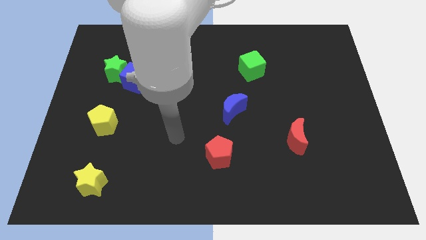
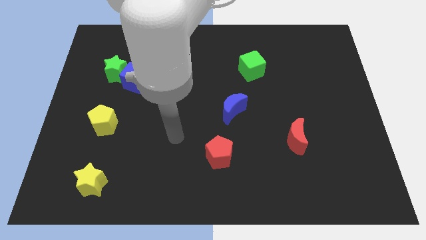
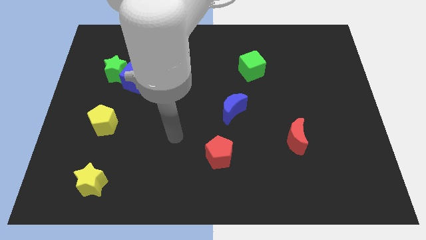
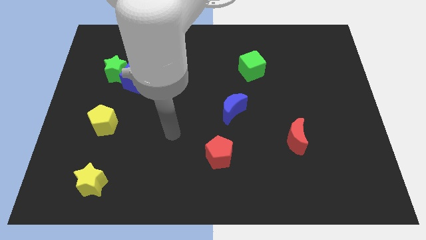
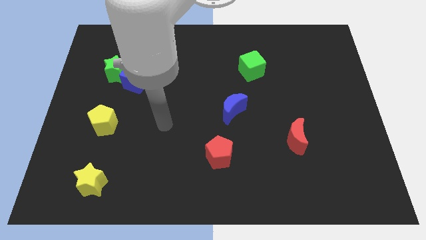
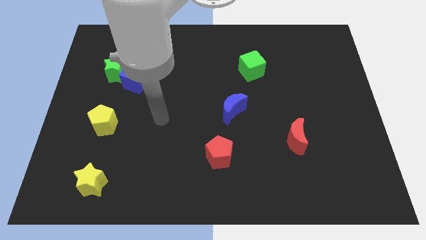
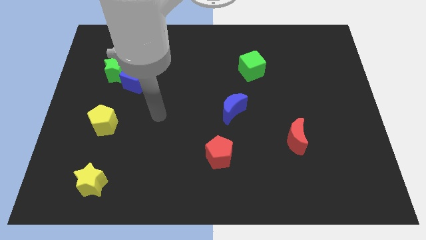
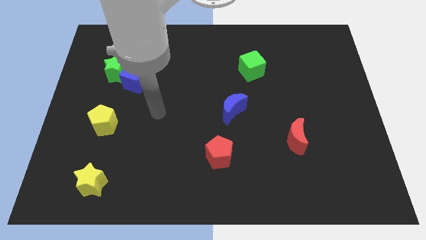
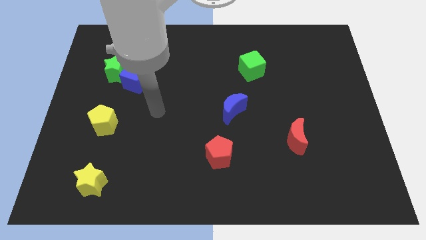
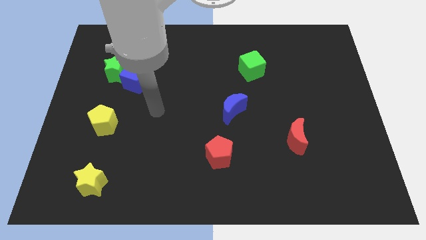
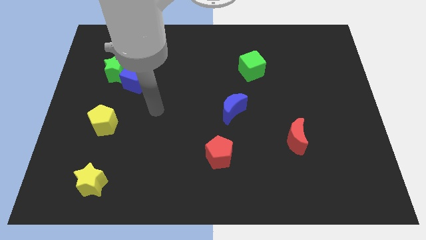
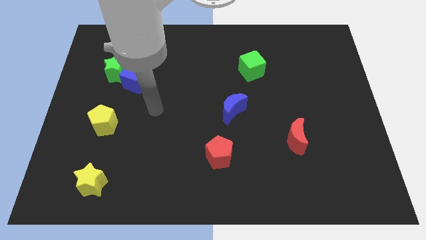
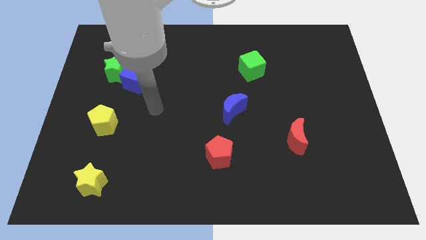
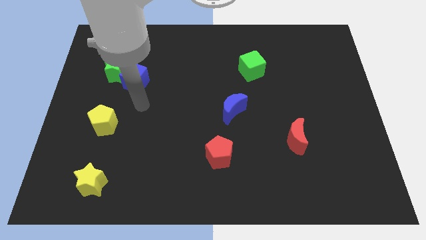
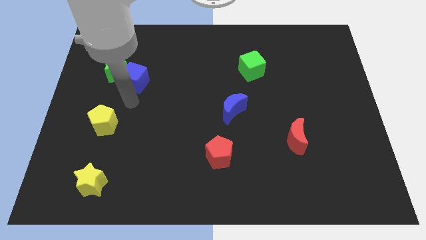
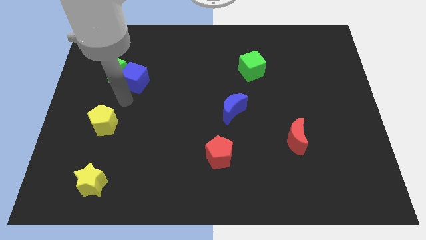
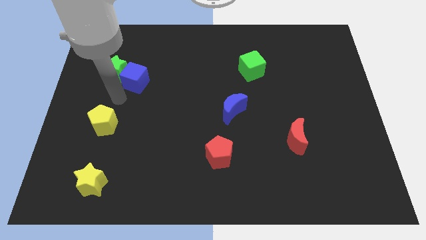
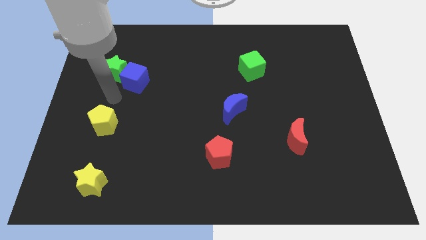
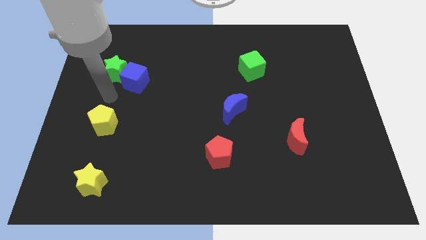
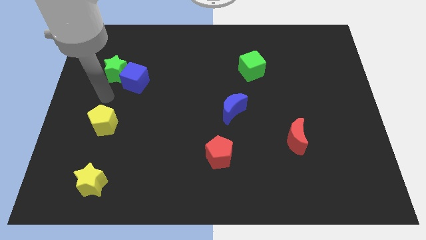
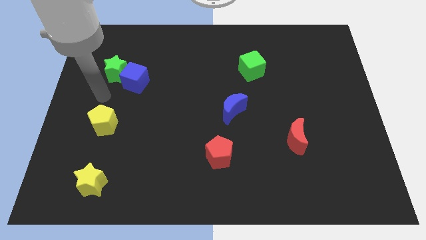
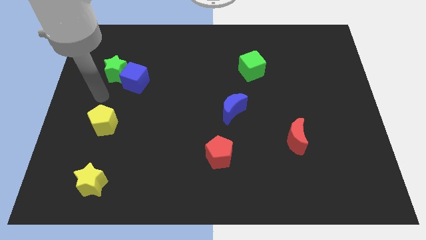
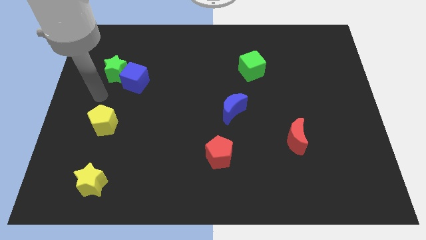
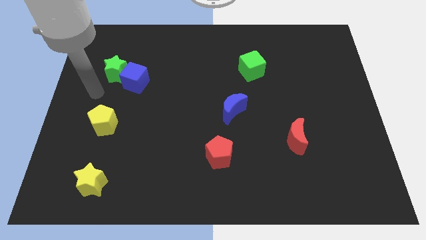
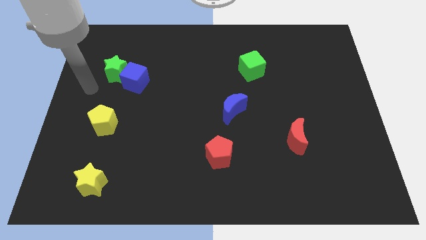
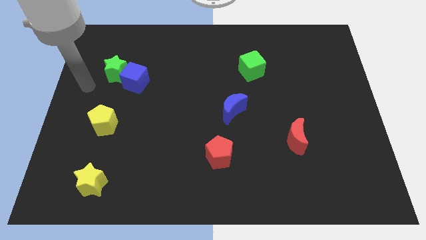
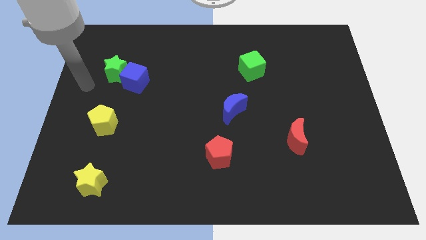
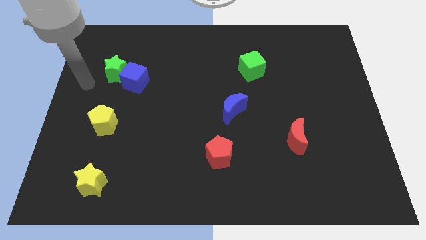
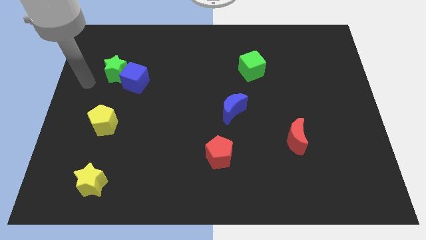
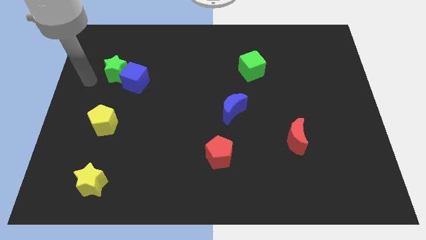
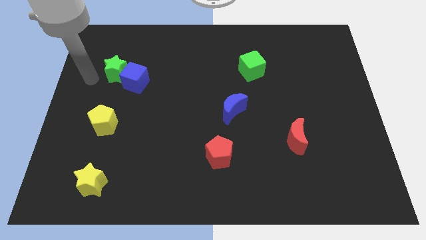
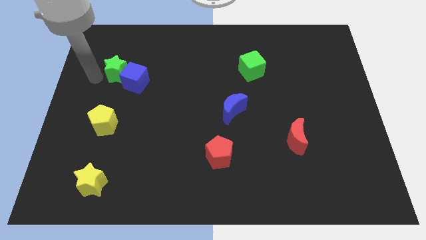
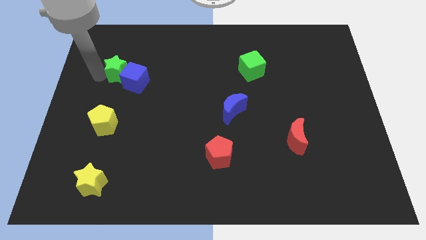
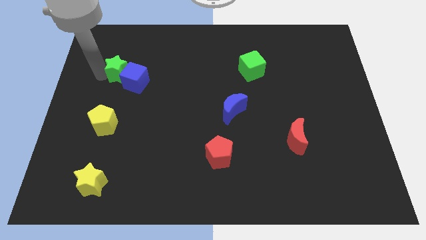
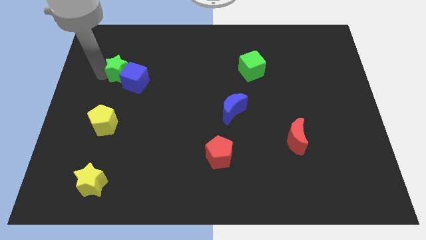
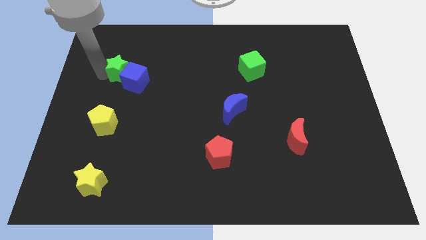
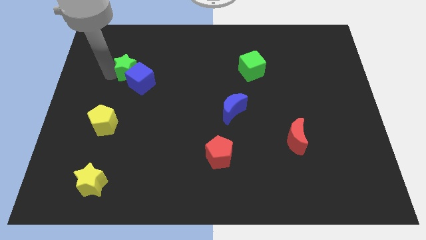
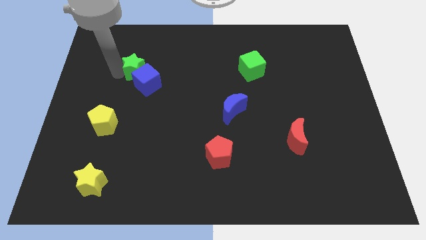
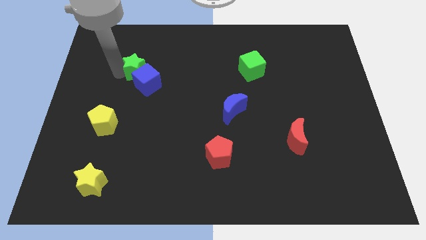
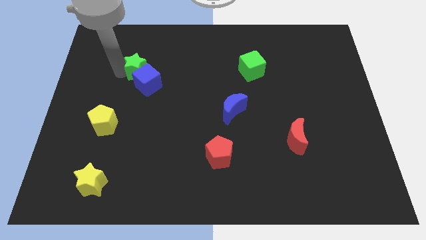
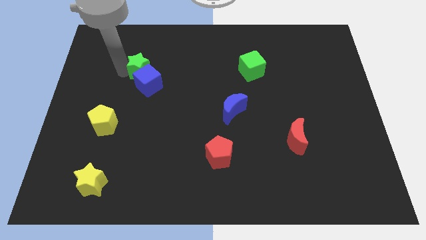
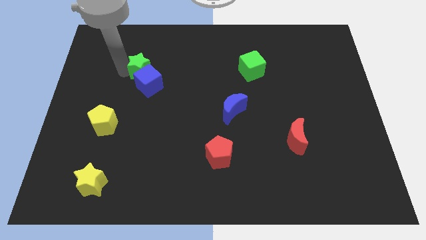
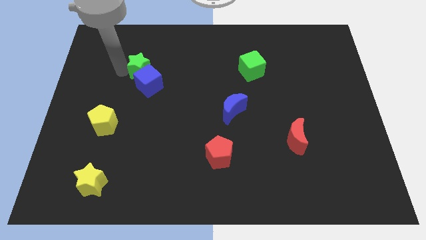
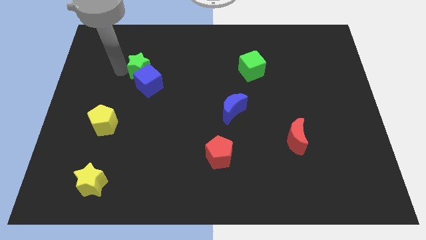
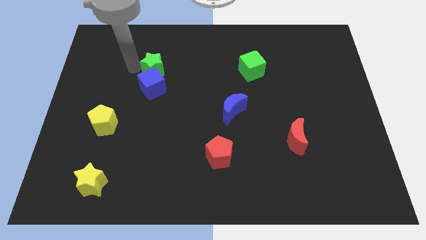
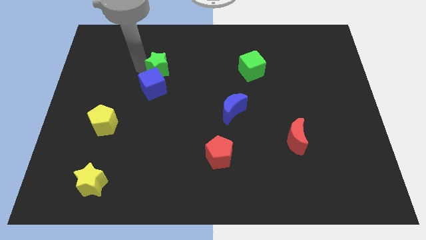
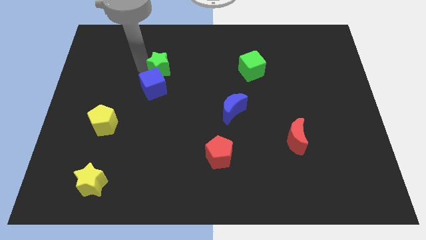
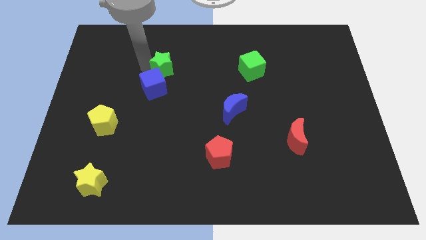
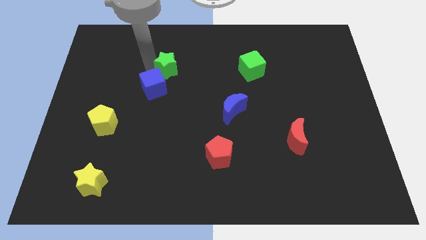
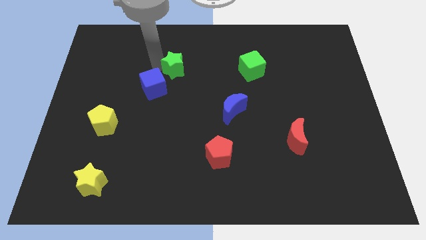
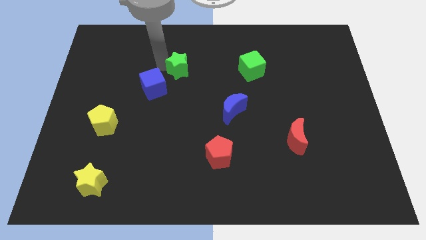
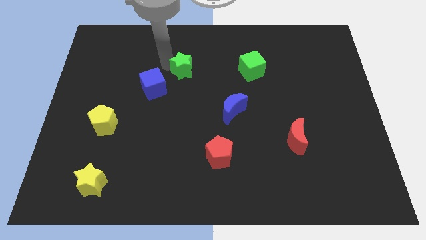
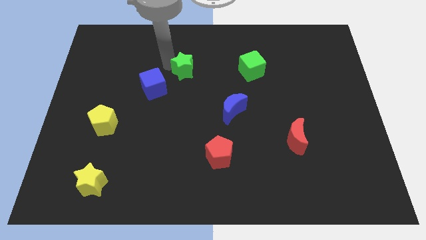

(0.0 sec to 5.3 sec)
separate the green star from the blue cube

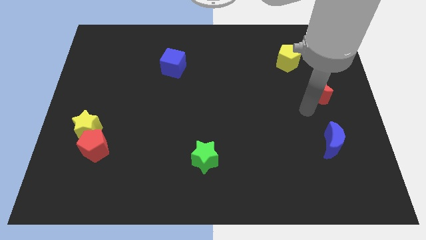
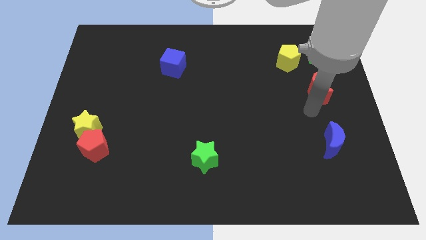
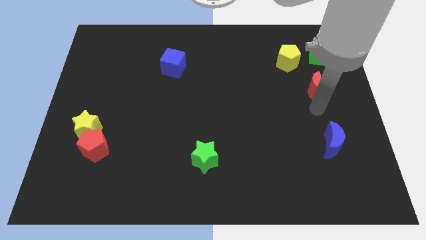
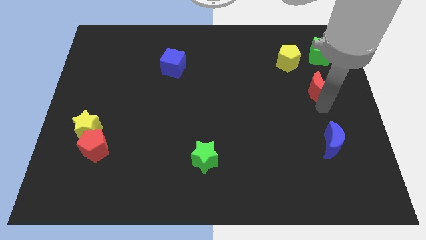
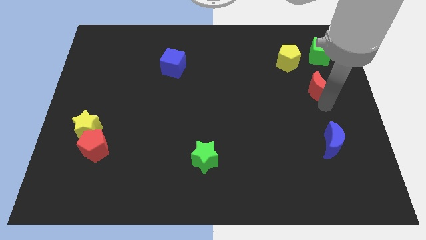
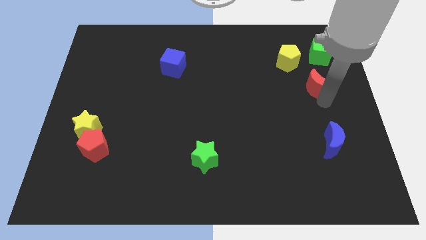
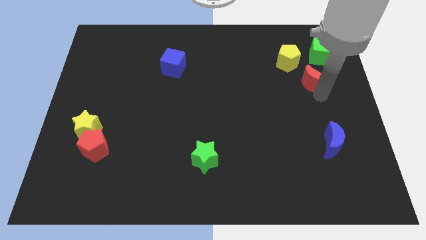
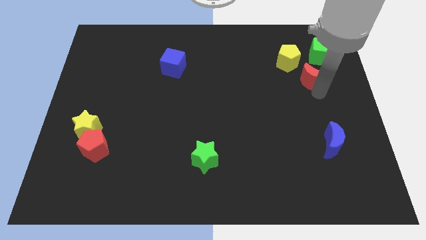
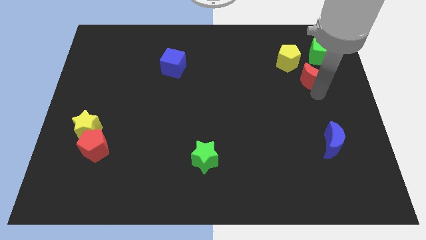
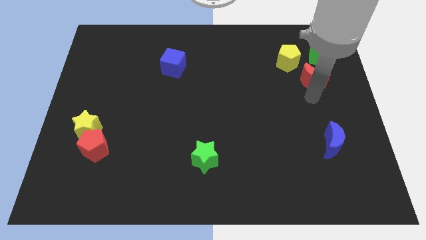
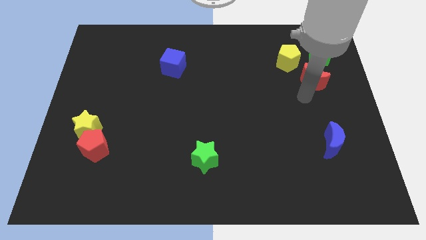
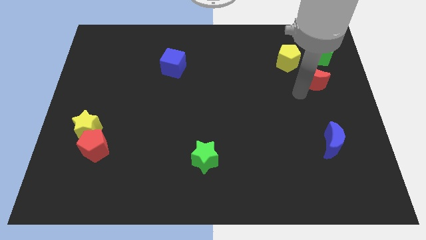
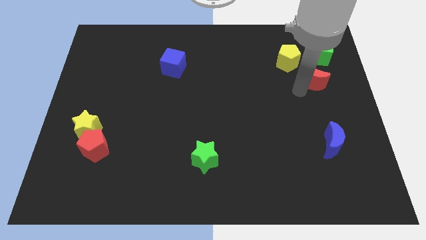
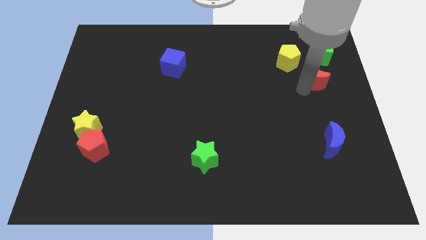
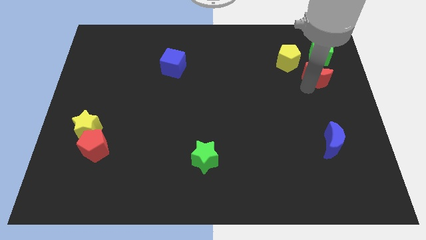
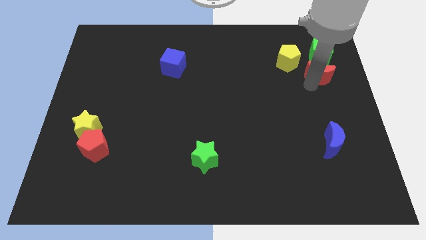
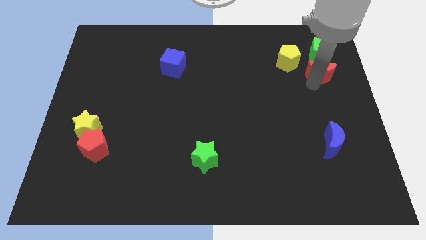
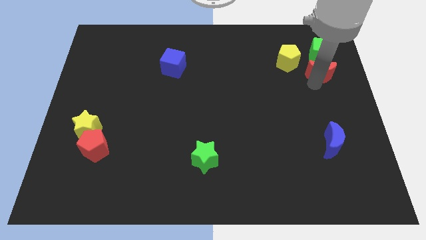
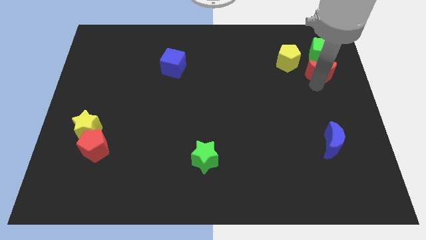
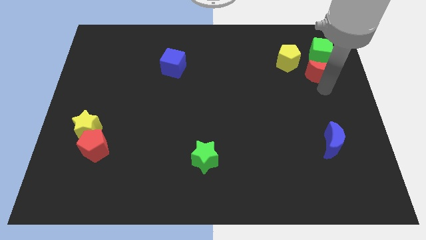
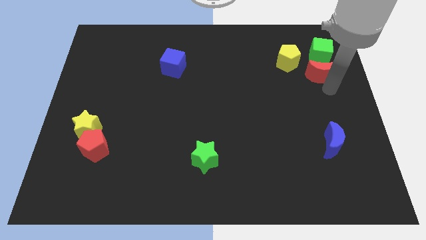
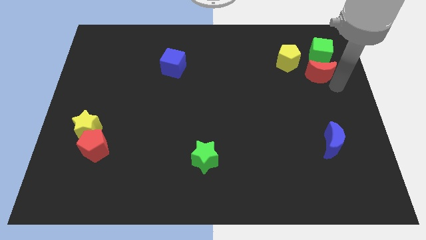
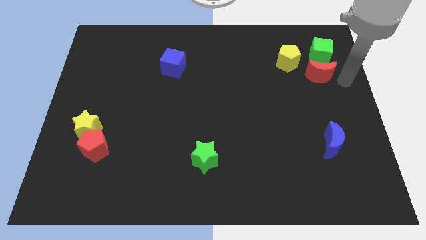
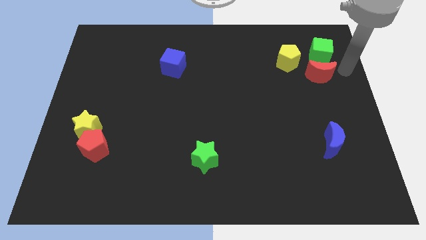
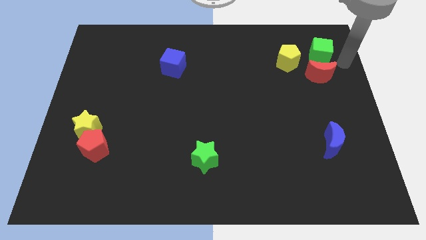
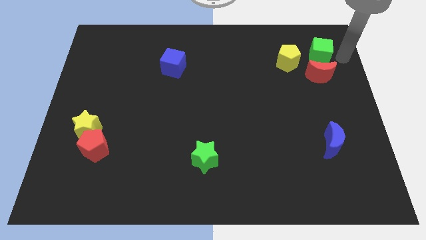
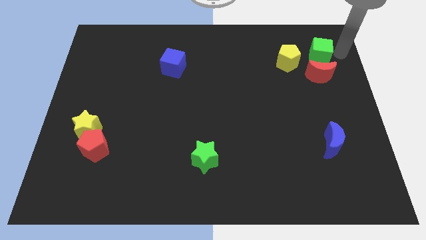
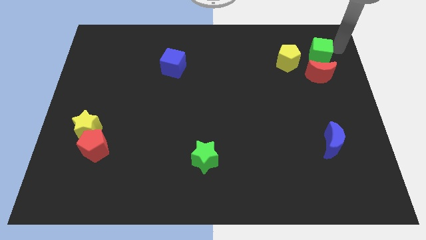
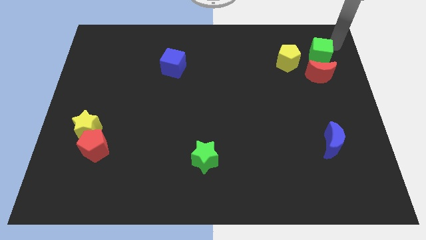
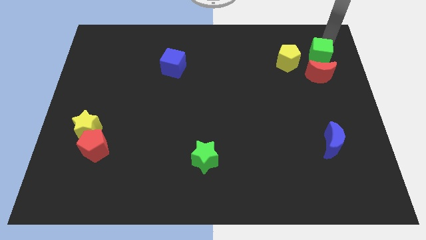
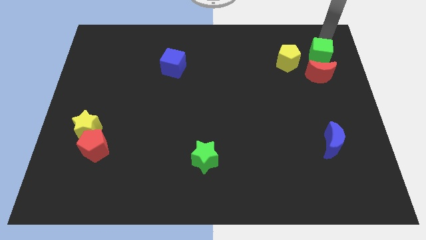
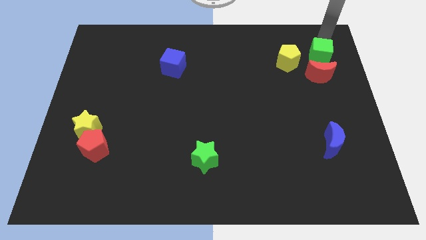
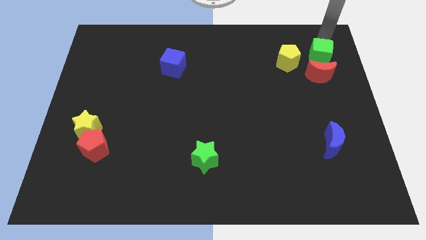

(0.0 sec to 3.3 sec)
push the red moon into the green cube

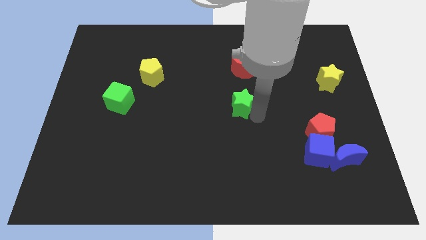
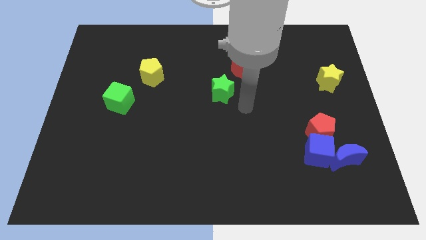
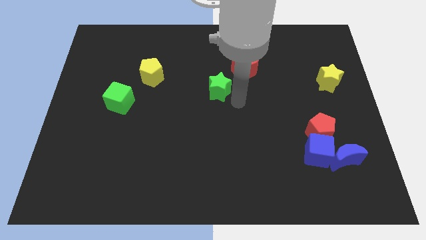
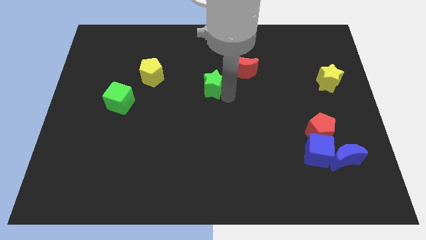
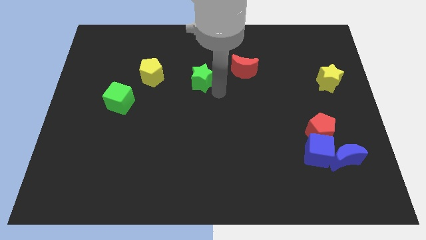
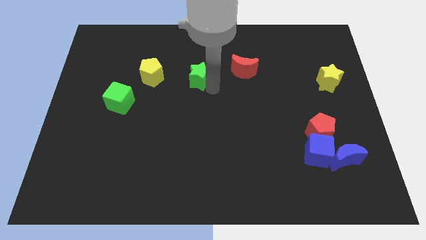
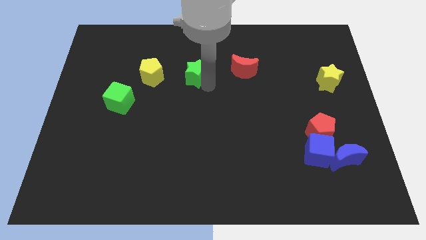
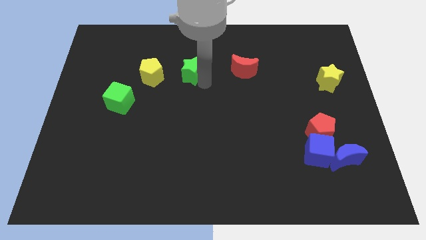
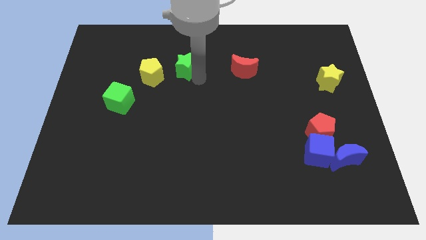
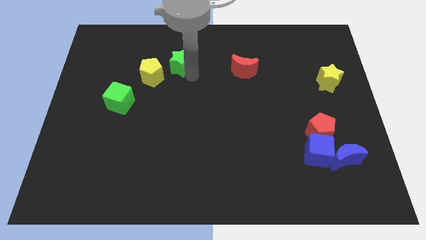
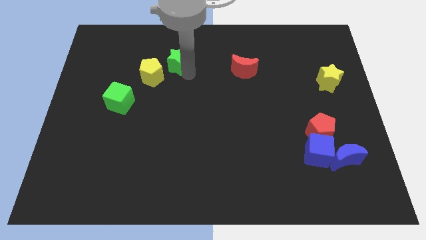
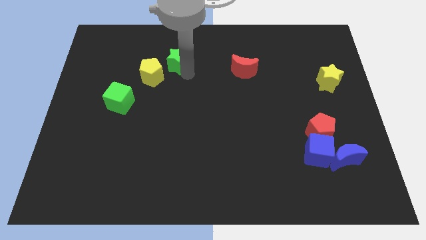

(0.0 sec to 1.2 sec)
move the green star close to the yellow pentagon
